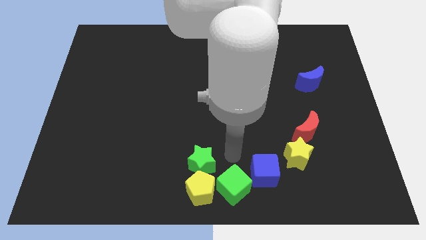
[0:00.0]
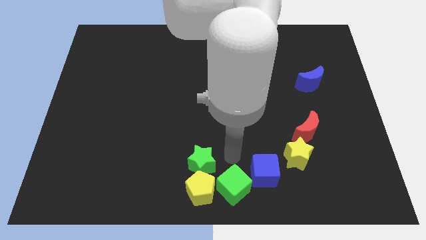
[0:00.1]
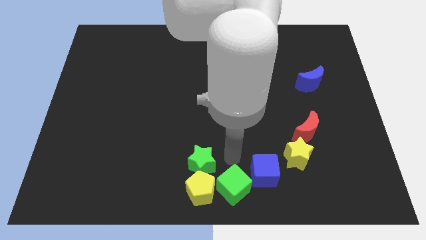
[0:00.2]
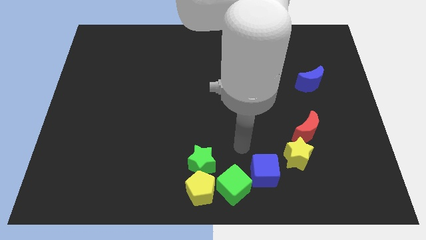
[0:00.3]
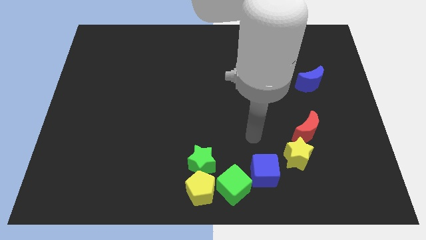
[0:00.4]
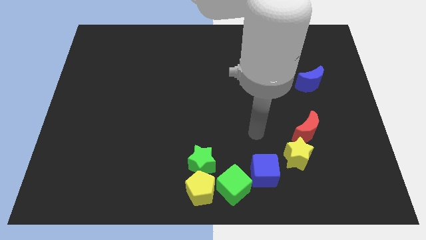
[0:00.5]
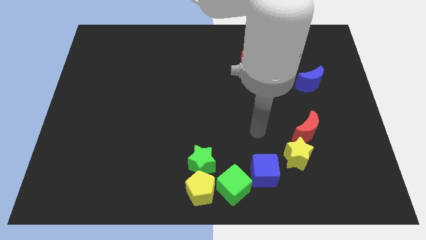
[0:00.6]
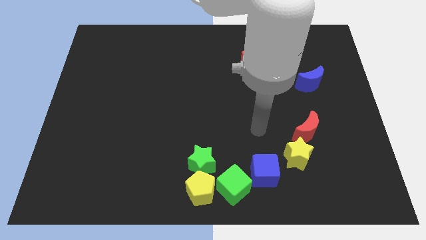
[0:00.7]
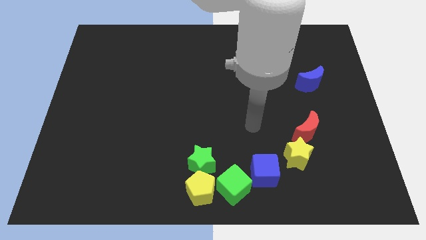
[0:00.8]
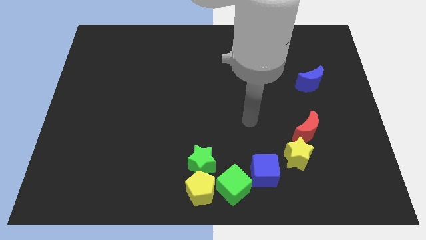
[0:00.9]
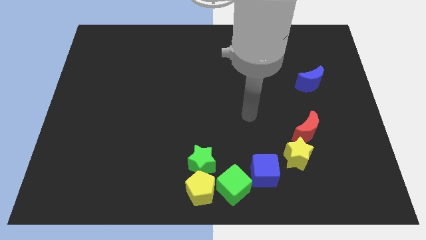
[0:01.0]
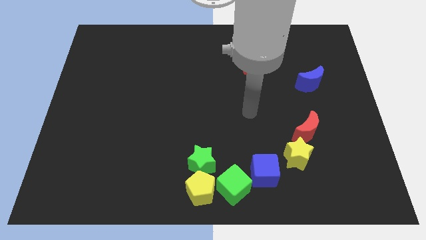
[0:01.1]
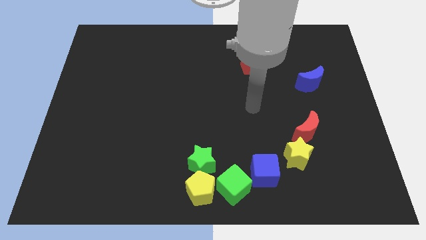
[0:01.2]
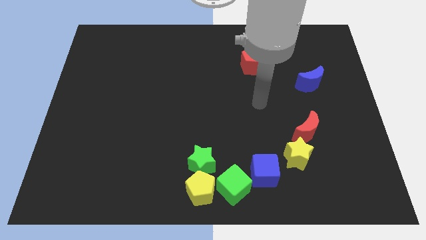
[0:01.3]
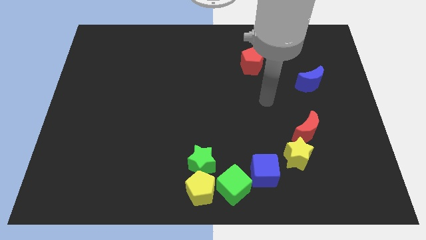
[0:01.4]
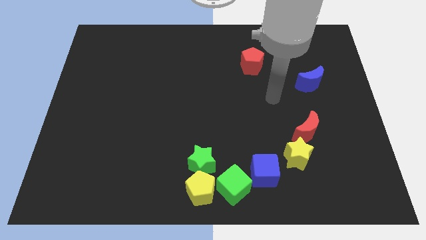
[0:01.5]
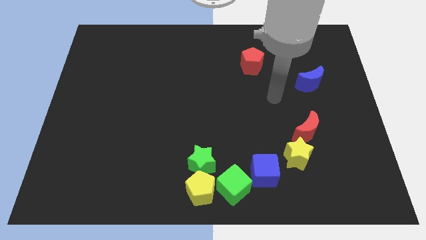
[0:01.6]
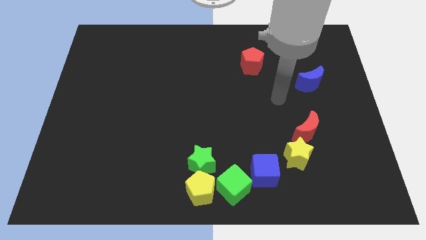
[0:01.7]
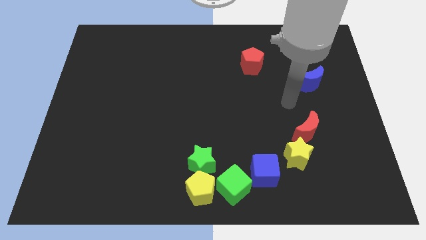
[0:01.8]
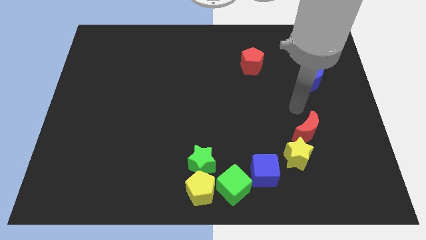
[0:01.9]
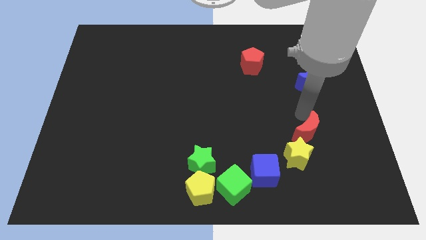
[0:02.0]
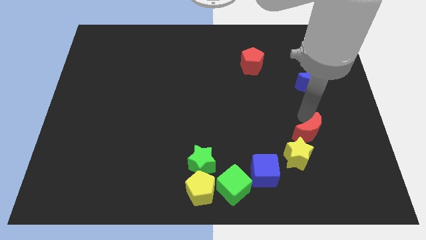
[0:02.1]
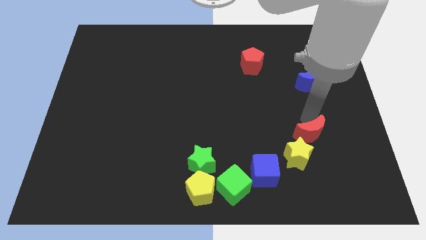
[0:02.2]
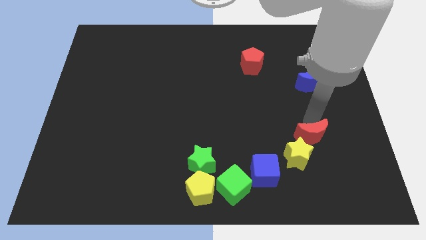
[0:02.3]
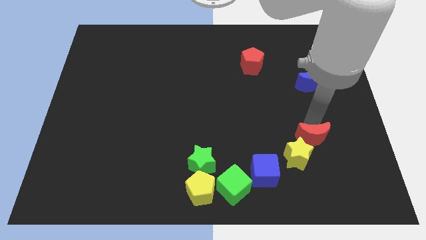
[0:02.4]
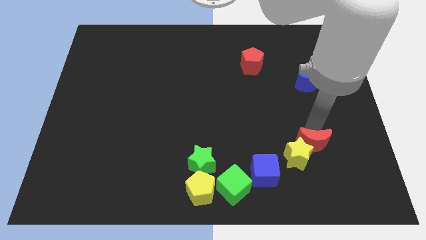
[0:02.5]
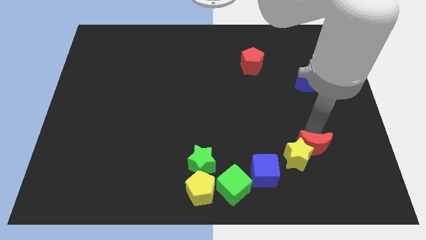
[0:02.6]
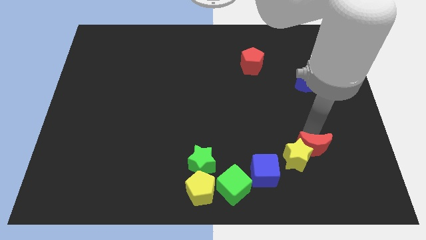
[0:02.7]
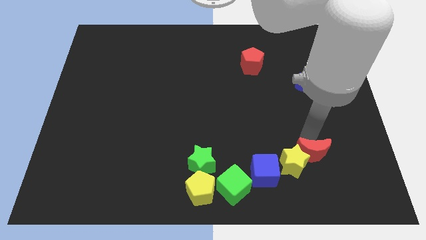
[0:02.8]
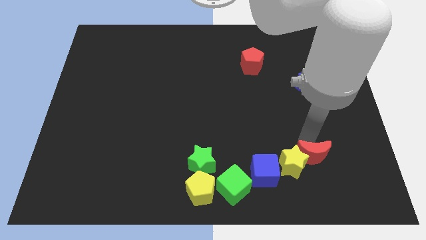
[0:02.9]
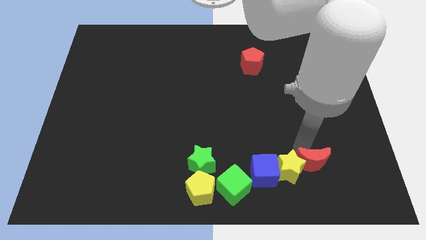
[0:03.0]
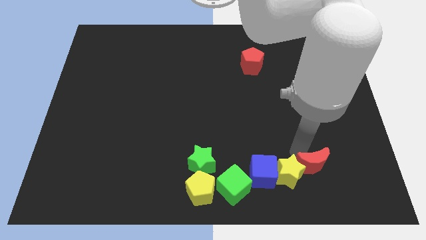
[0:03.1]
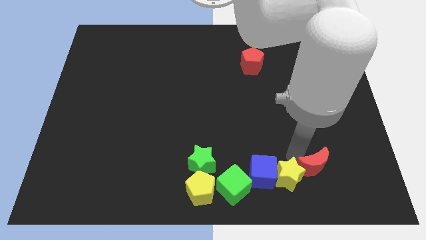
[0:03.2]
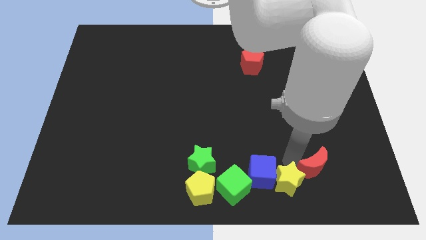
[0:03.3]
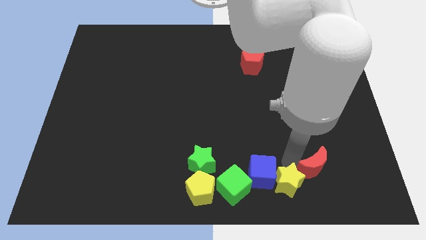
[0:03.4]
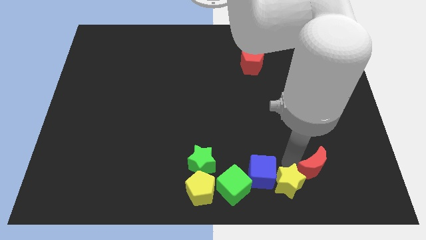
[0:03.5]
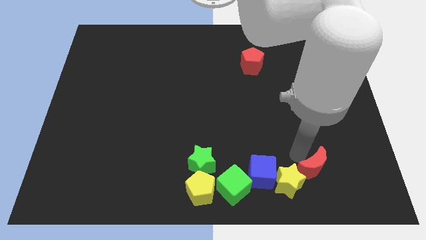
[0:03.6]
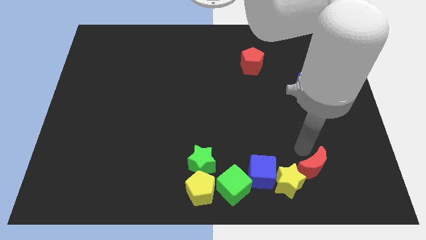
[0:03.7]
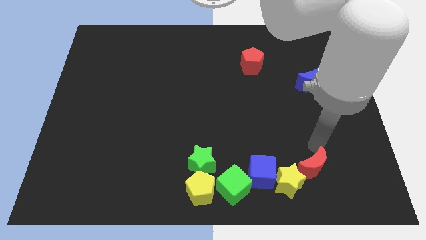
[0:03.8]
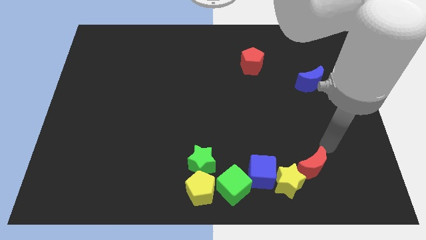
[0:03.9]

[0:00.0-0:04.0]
move red moon along with yellow star slightly down

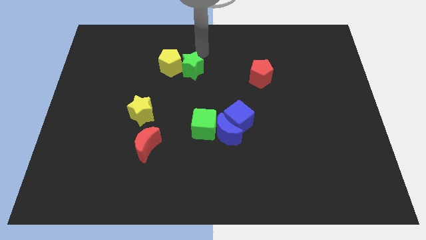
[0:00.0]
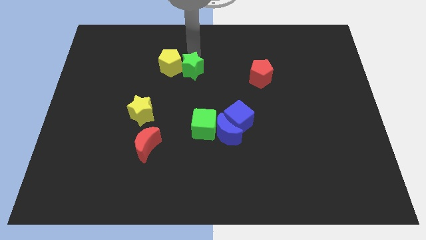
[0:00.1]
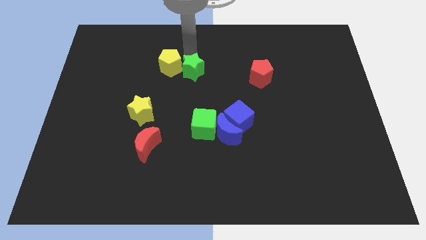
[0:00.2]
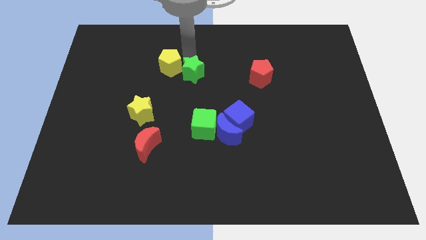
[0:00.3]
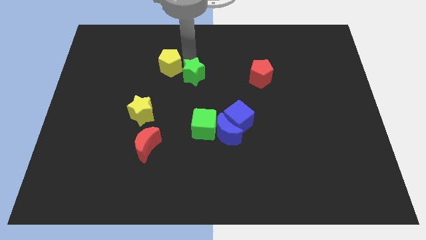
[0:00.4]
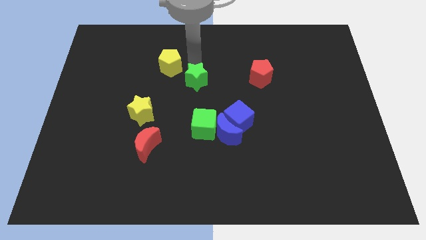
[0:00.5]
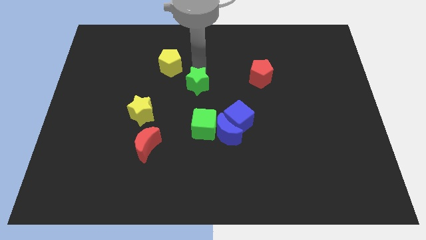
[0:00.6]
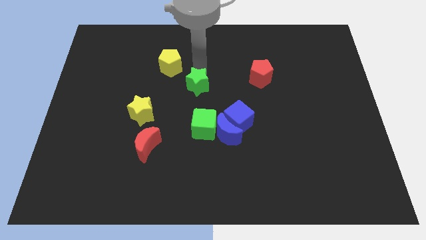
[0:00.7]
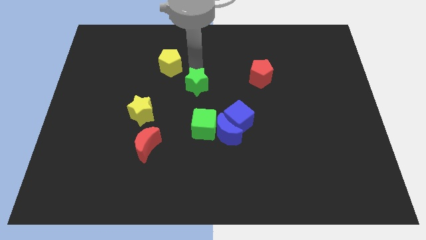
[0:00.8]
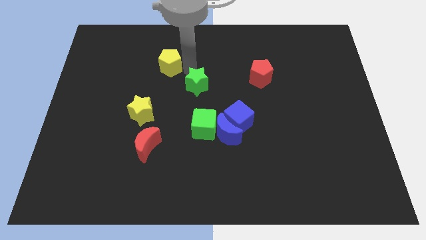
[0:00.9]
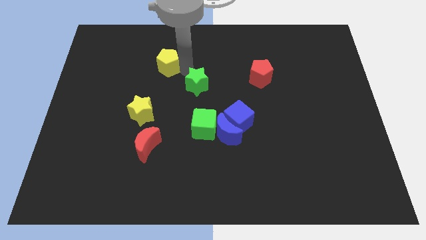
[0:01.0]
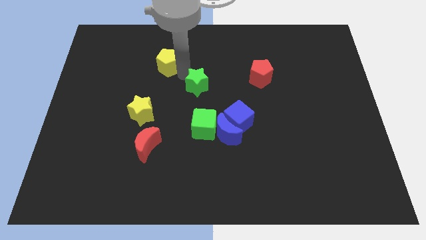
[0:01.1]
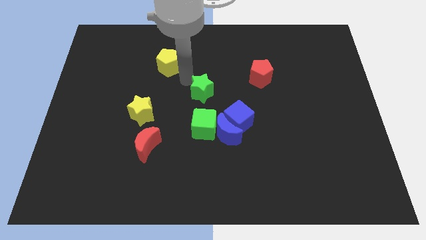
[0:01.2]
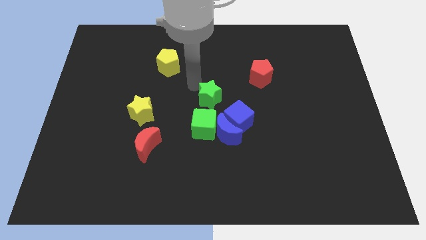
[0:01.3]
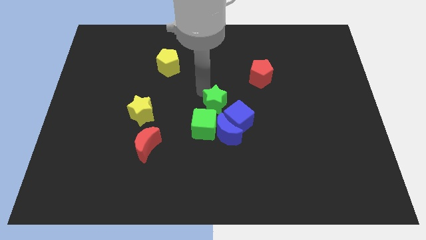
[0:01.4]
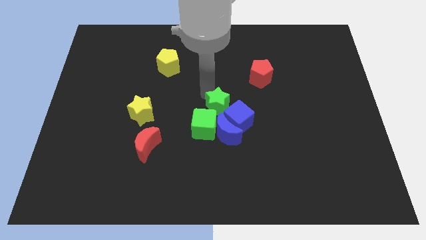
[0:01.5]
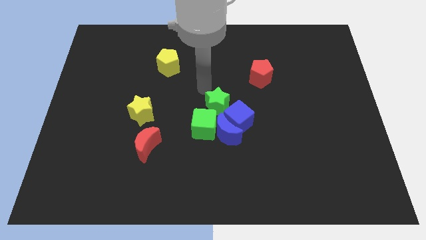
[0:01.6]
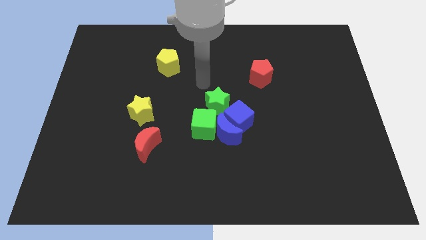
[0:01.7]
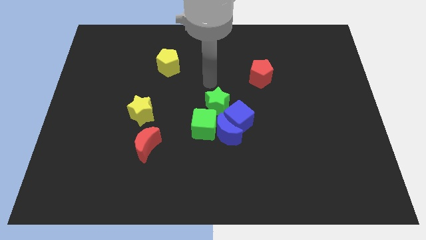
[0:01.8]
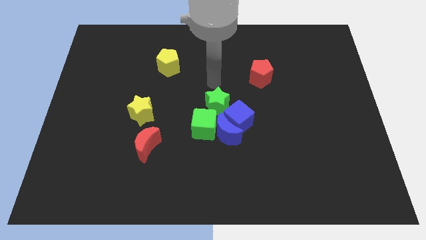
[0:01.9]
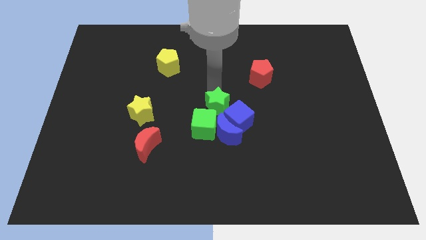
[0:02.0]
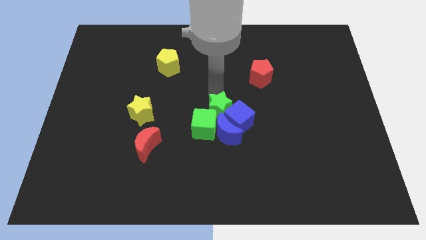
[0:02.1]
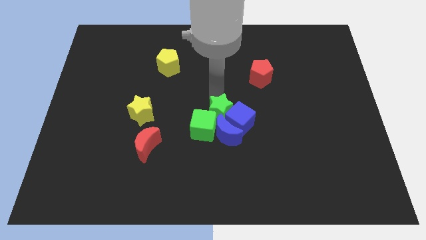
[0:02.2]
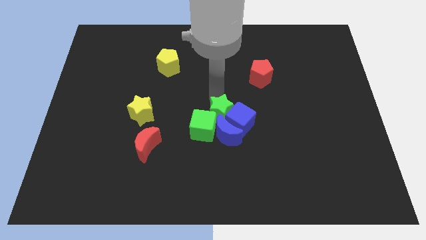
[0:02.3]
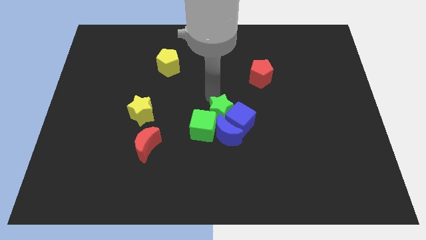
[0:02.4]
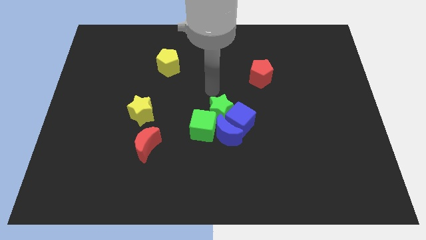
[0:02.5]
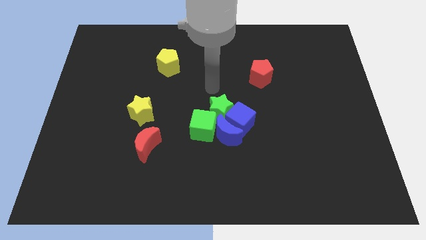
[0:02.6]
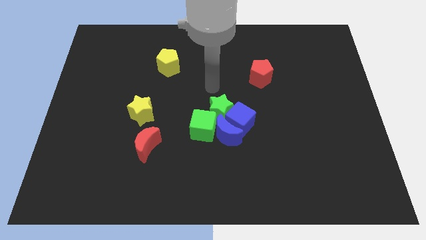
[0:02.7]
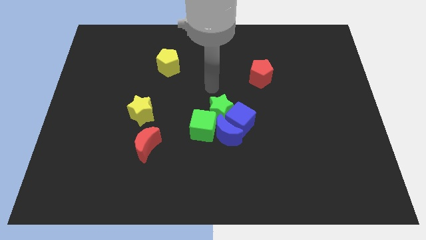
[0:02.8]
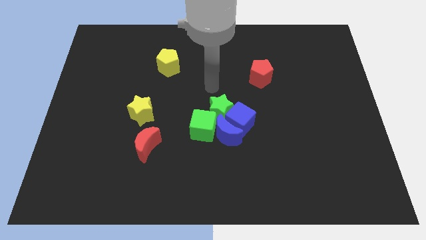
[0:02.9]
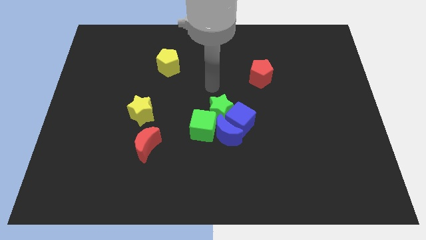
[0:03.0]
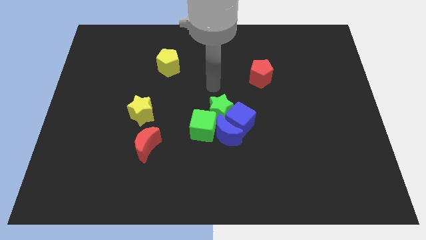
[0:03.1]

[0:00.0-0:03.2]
move the green star into the group of blocks

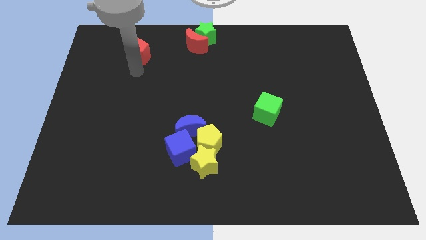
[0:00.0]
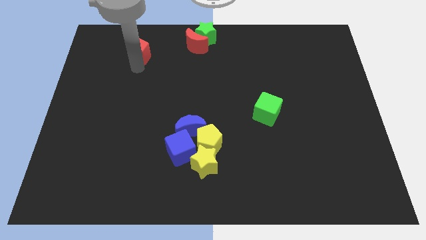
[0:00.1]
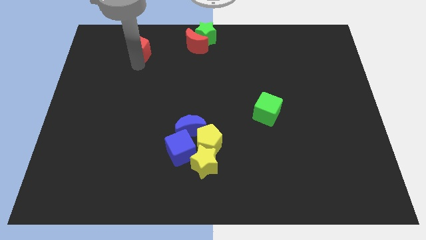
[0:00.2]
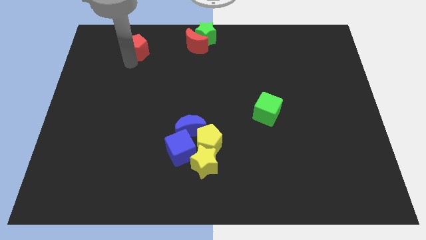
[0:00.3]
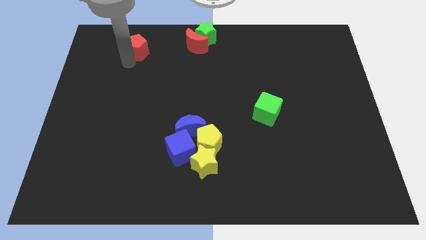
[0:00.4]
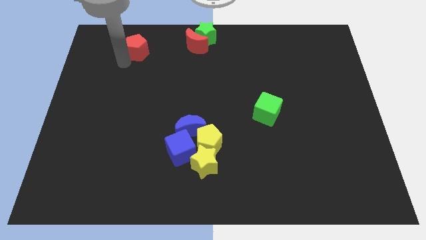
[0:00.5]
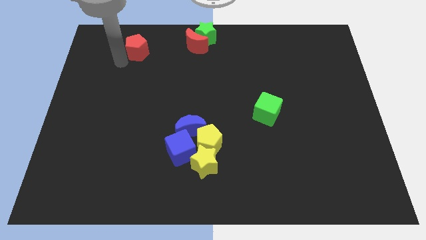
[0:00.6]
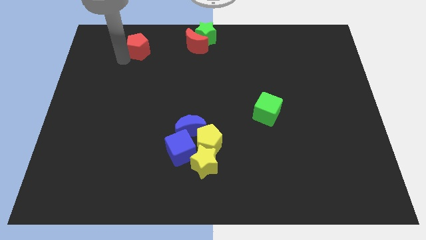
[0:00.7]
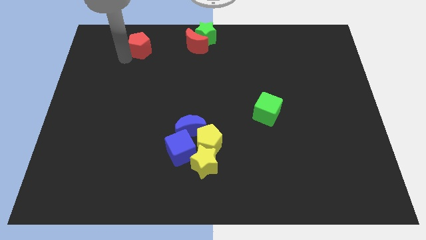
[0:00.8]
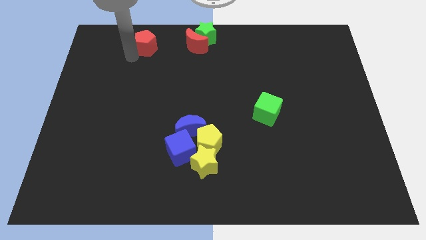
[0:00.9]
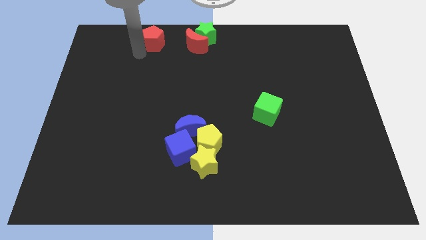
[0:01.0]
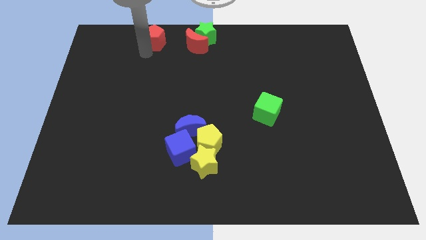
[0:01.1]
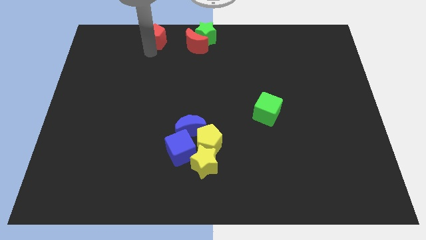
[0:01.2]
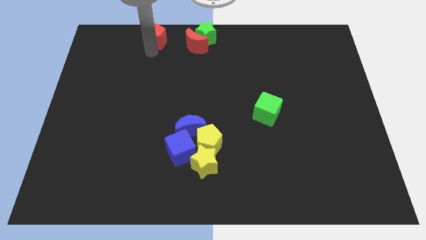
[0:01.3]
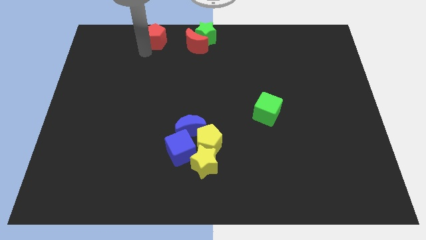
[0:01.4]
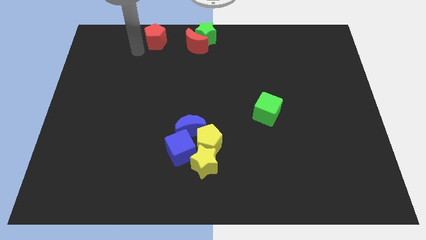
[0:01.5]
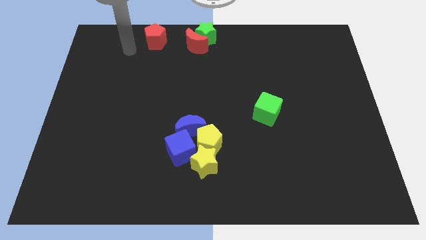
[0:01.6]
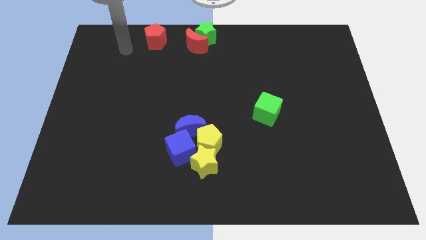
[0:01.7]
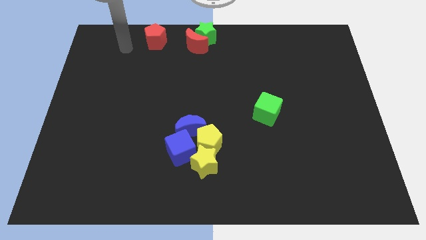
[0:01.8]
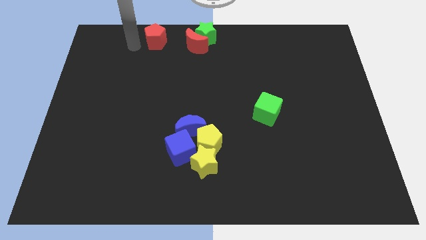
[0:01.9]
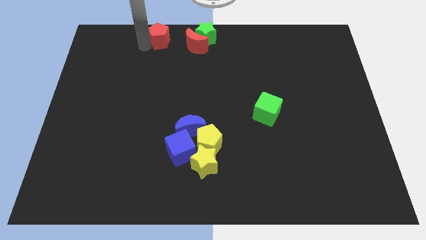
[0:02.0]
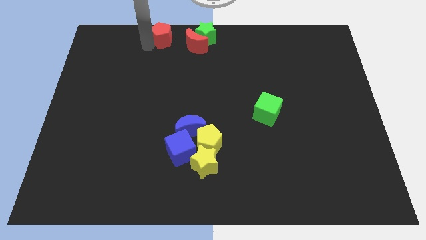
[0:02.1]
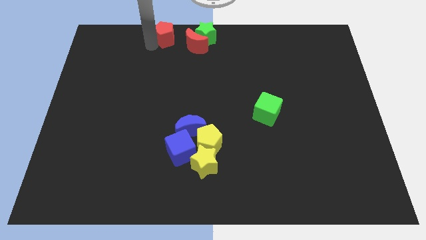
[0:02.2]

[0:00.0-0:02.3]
place red pentagon toward up
